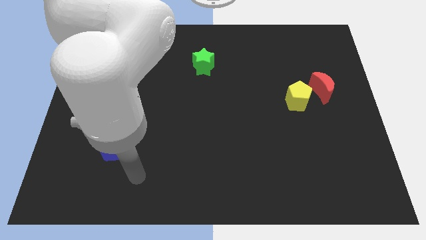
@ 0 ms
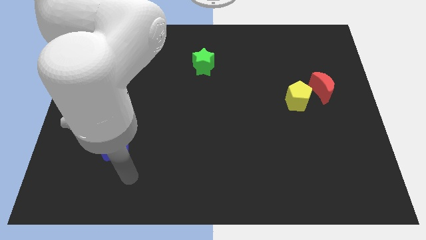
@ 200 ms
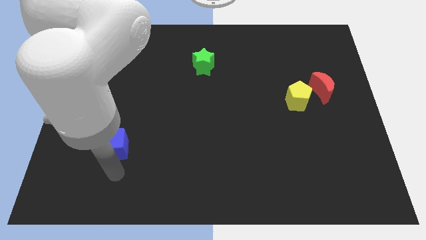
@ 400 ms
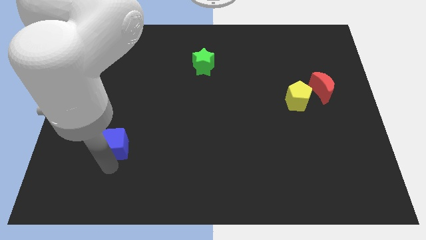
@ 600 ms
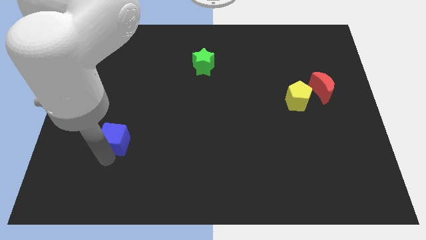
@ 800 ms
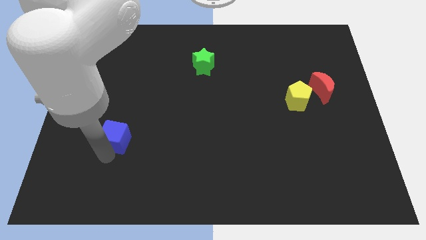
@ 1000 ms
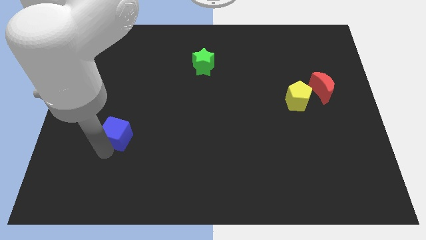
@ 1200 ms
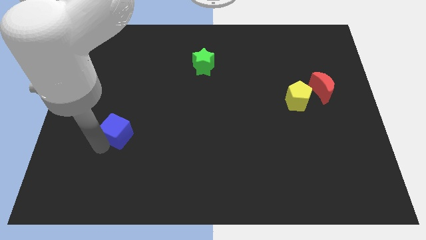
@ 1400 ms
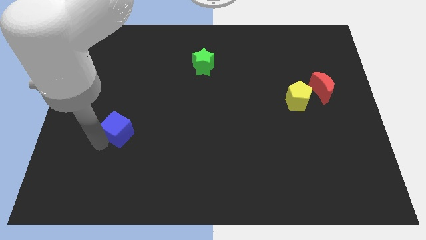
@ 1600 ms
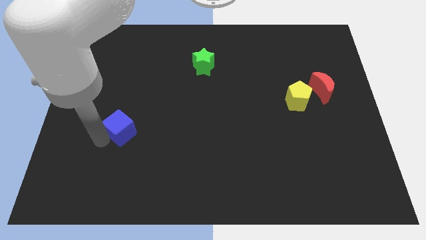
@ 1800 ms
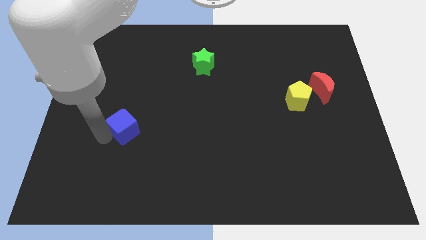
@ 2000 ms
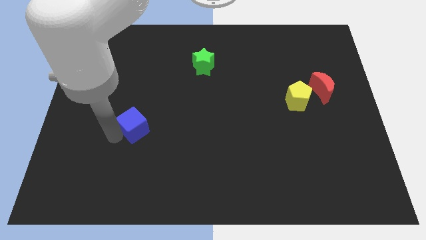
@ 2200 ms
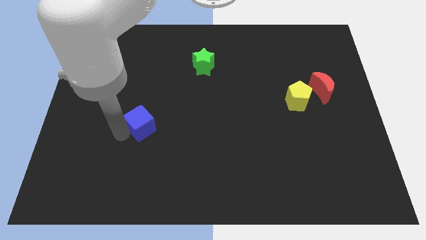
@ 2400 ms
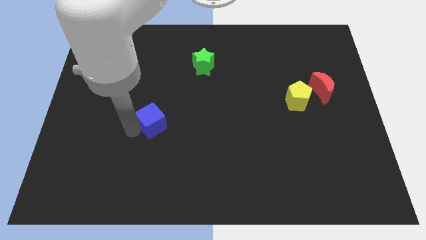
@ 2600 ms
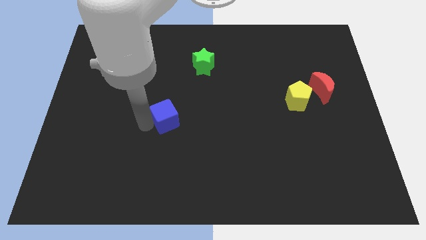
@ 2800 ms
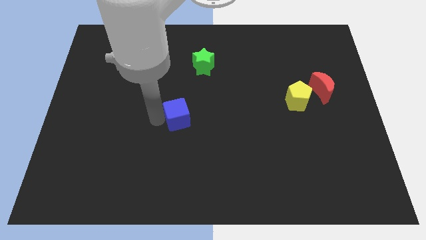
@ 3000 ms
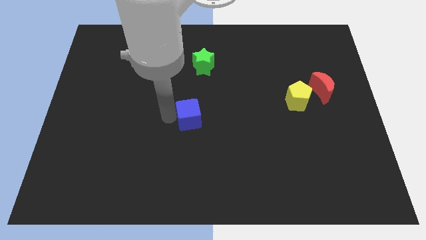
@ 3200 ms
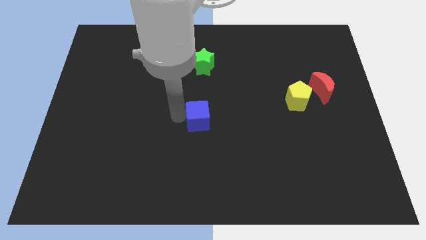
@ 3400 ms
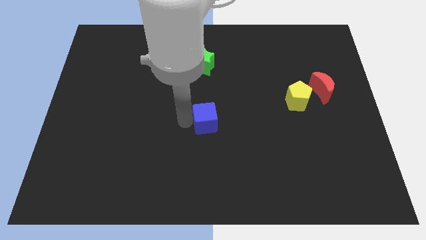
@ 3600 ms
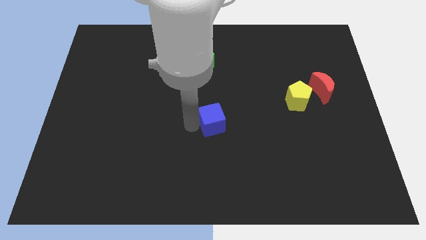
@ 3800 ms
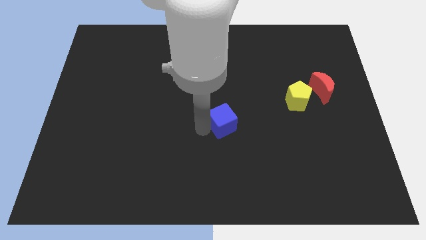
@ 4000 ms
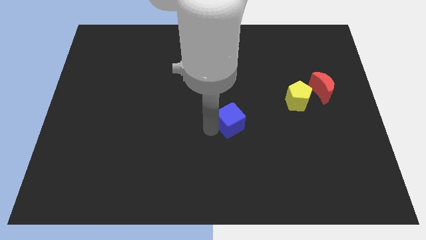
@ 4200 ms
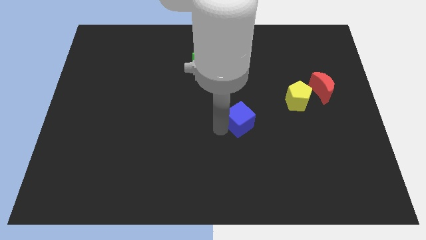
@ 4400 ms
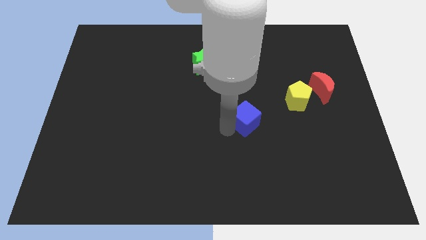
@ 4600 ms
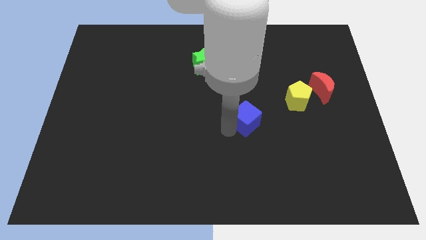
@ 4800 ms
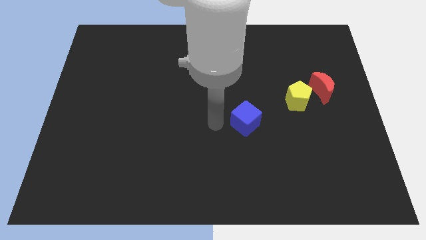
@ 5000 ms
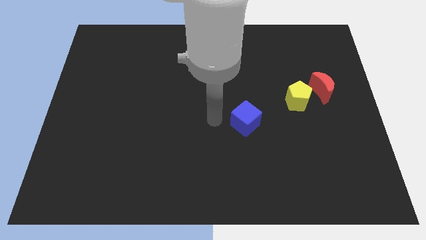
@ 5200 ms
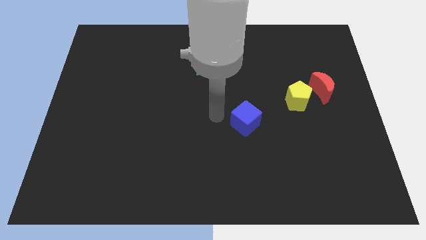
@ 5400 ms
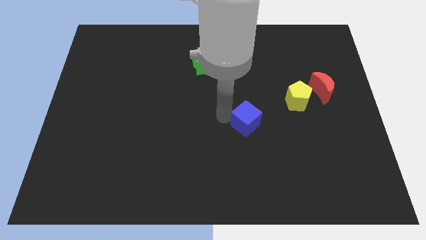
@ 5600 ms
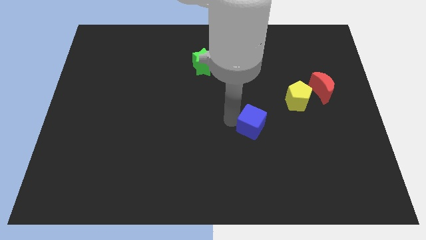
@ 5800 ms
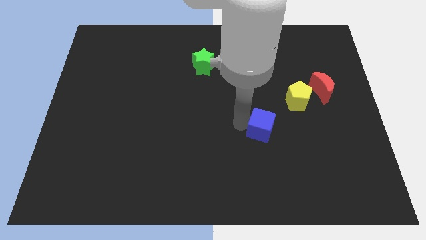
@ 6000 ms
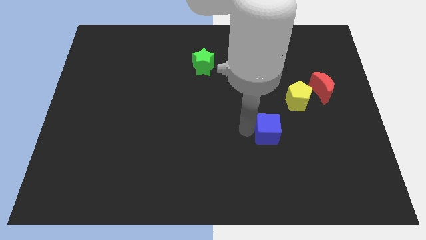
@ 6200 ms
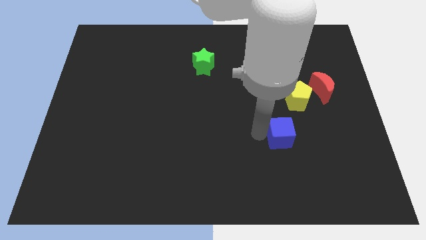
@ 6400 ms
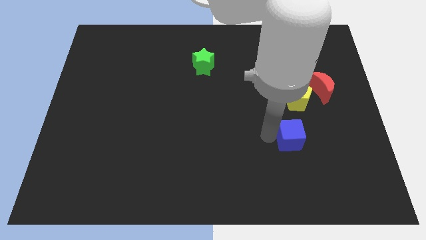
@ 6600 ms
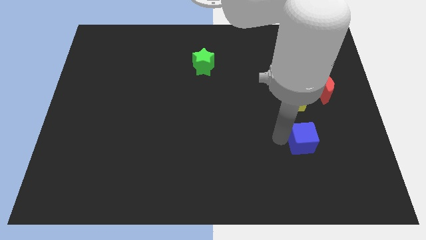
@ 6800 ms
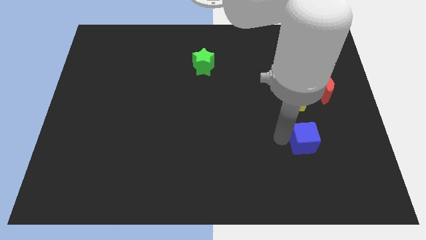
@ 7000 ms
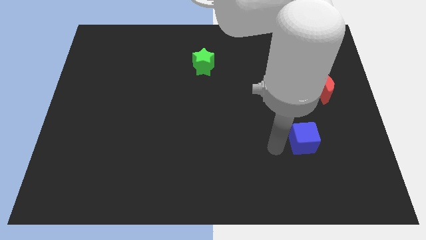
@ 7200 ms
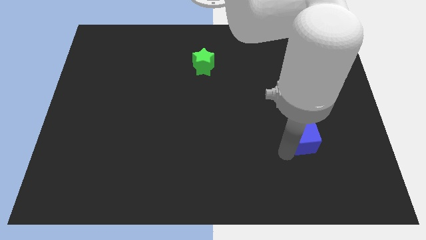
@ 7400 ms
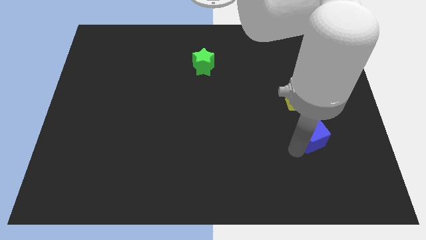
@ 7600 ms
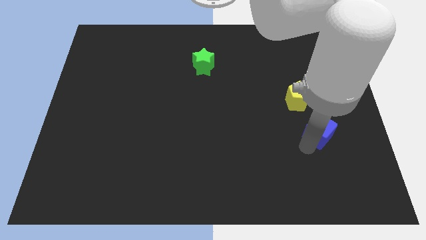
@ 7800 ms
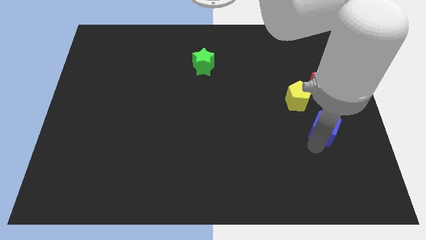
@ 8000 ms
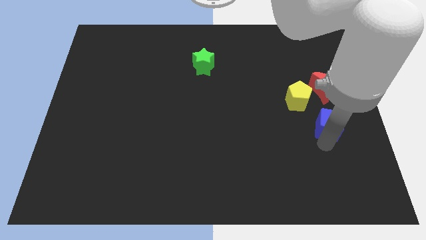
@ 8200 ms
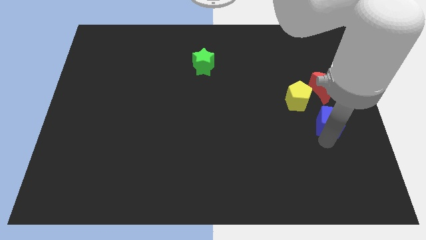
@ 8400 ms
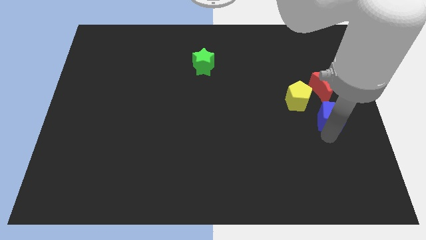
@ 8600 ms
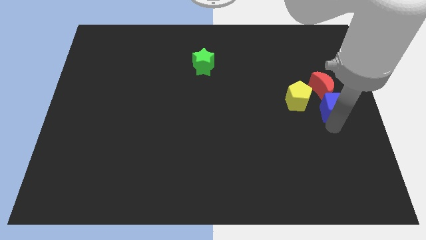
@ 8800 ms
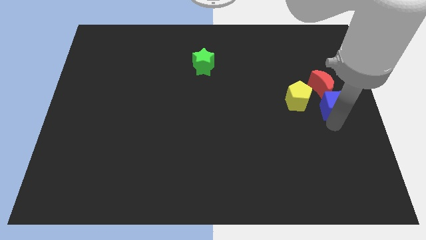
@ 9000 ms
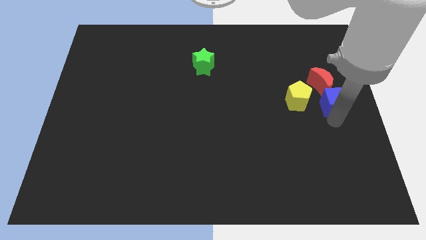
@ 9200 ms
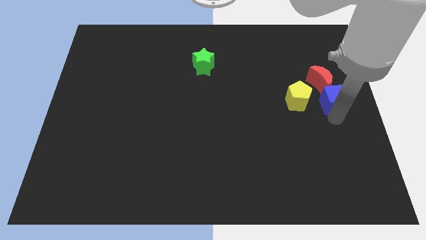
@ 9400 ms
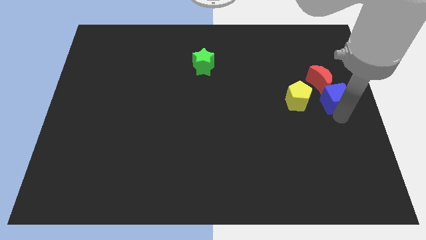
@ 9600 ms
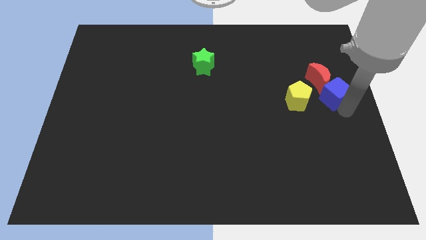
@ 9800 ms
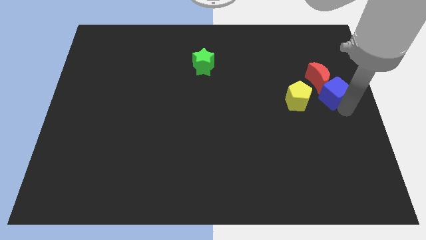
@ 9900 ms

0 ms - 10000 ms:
slide the blue cube to the moon

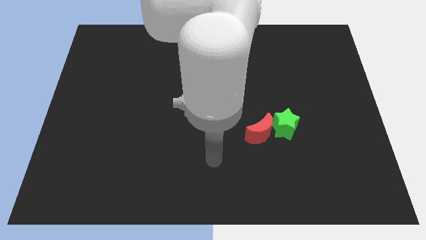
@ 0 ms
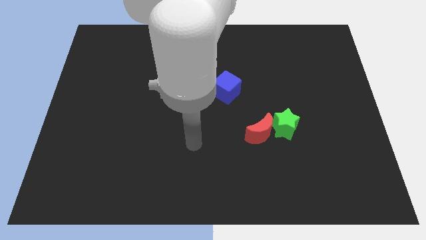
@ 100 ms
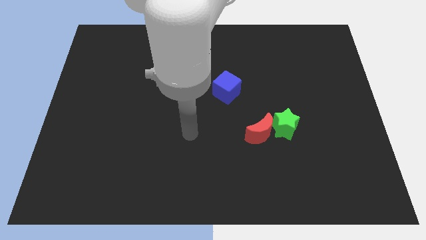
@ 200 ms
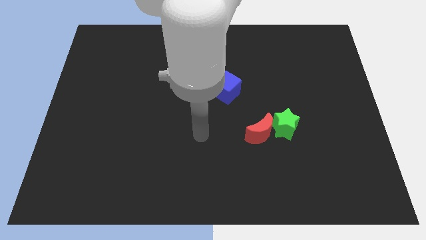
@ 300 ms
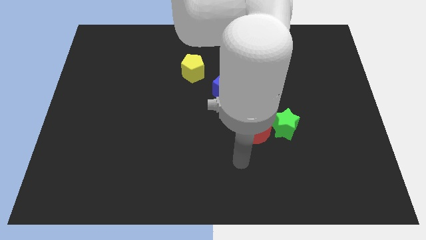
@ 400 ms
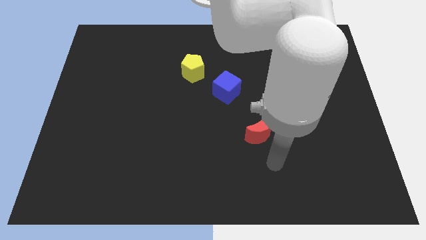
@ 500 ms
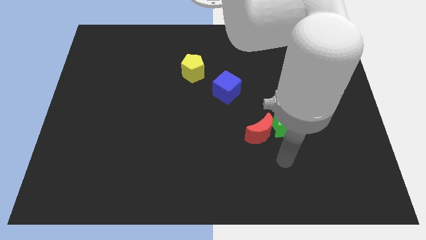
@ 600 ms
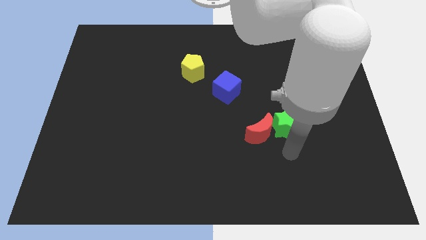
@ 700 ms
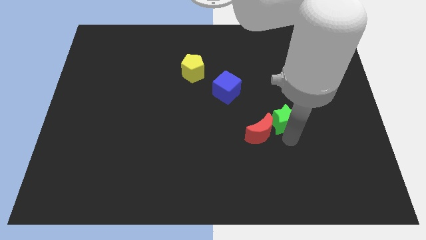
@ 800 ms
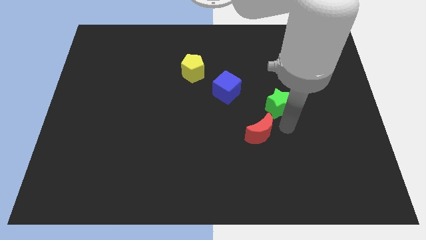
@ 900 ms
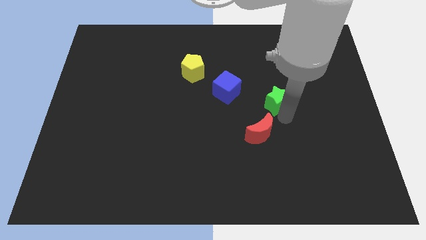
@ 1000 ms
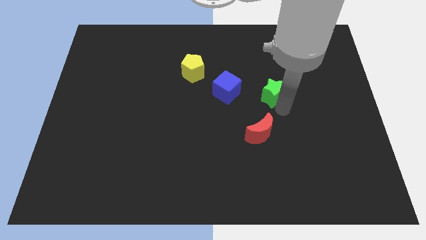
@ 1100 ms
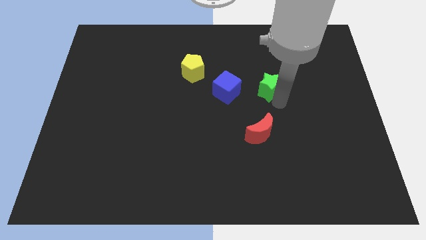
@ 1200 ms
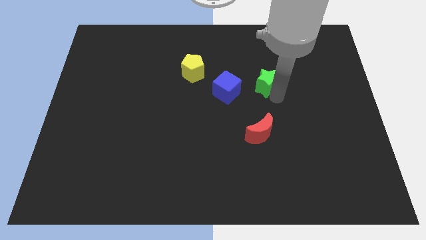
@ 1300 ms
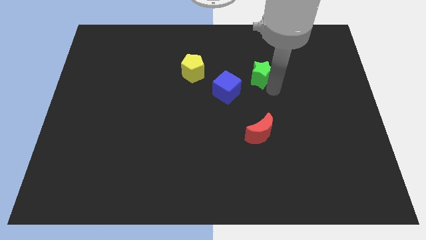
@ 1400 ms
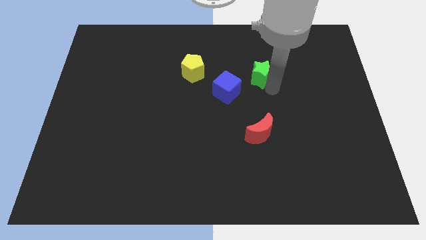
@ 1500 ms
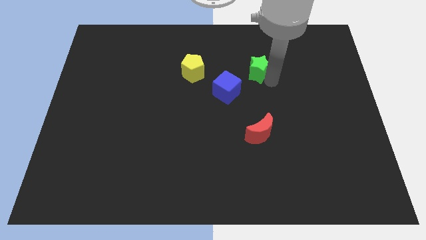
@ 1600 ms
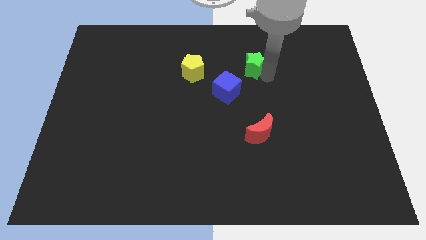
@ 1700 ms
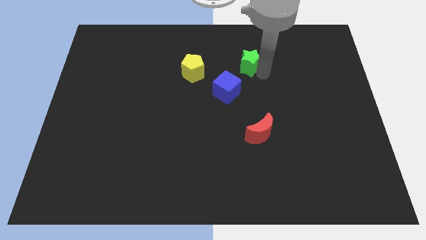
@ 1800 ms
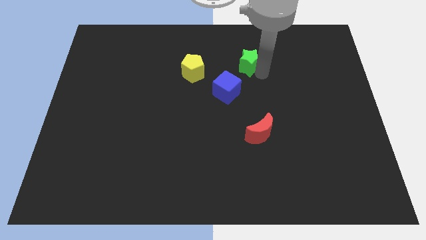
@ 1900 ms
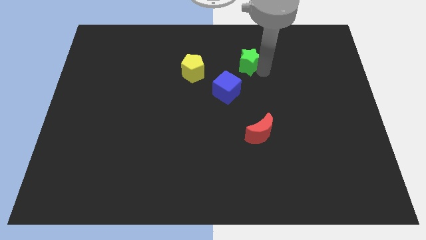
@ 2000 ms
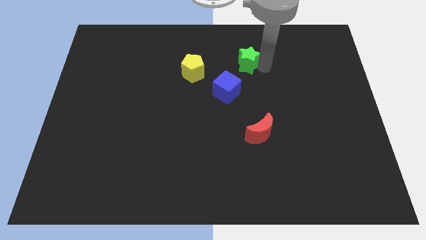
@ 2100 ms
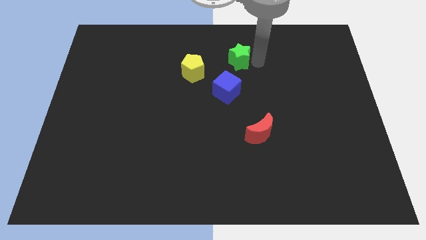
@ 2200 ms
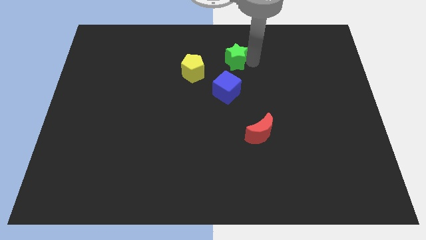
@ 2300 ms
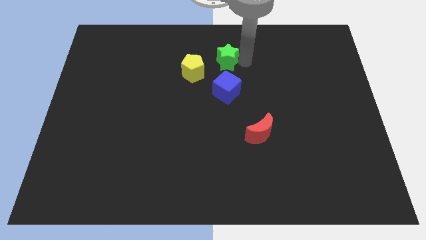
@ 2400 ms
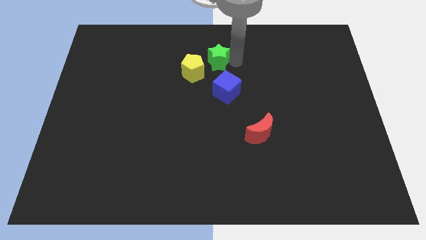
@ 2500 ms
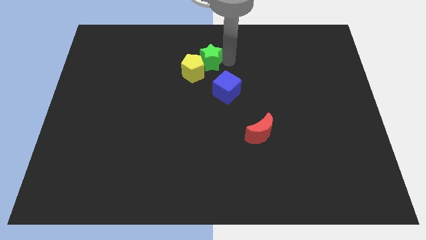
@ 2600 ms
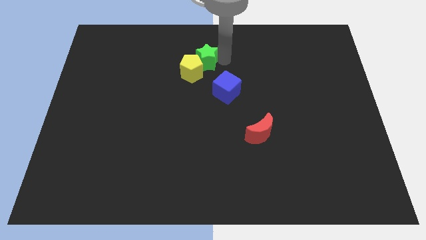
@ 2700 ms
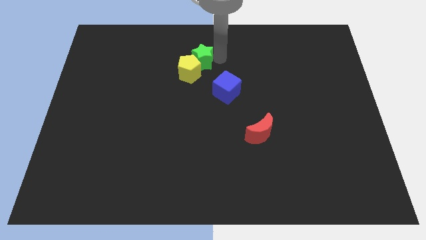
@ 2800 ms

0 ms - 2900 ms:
slide the green block to the yellow block
